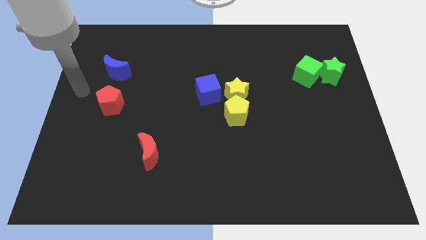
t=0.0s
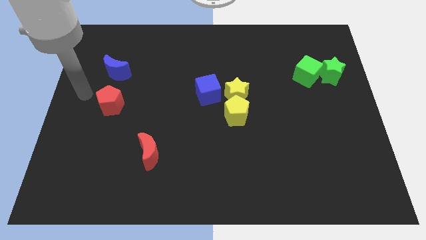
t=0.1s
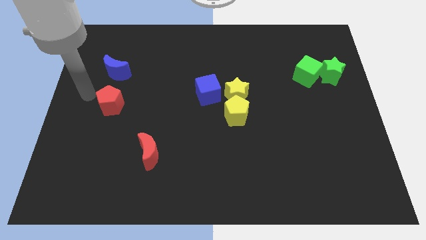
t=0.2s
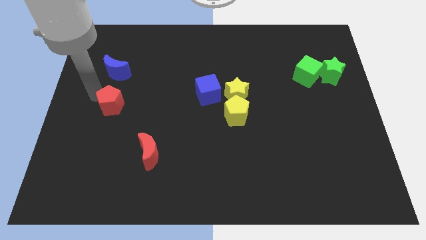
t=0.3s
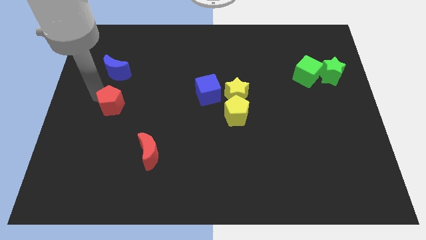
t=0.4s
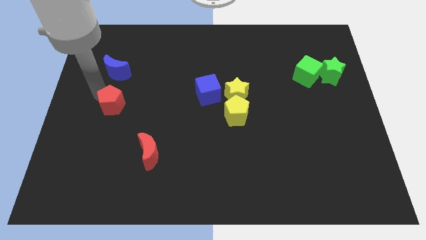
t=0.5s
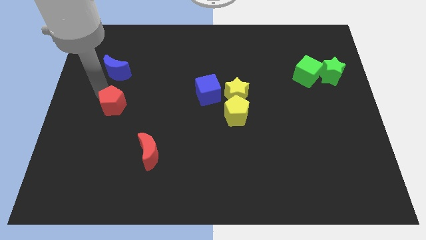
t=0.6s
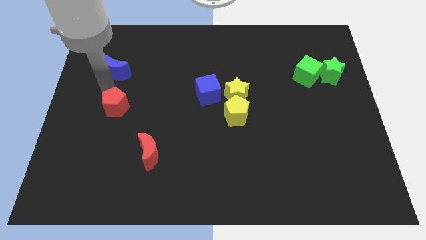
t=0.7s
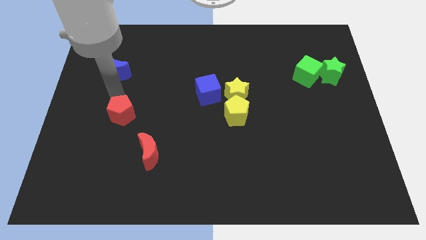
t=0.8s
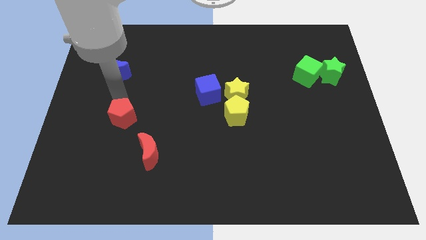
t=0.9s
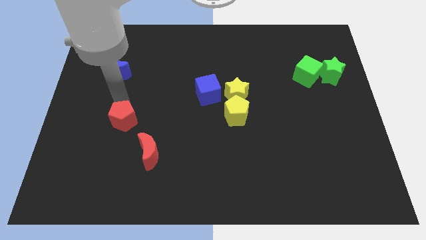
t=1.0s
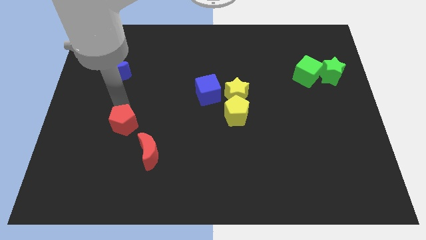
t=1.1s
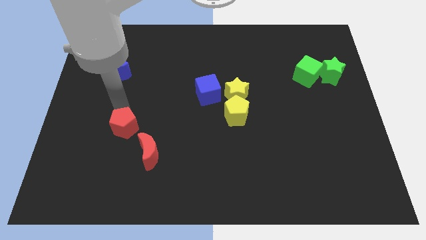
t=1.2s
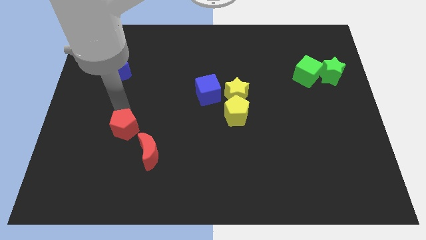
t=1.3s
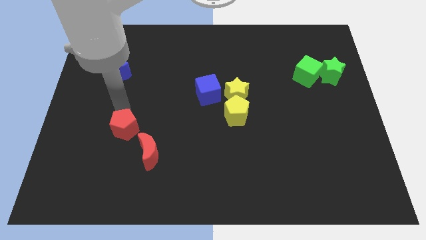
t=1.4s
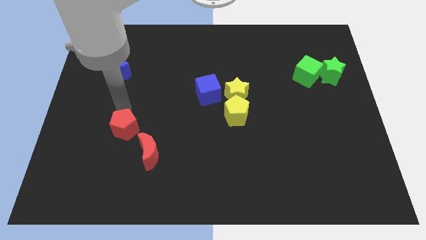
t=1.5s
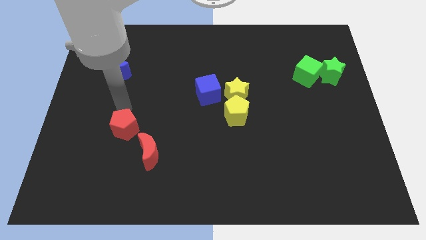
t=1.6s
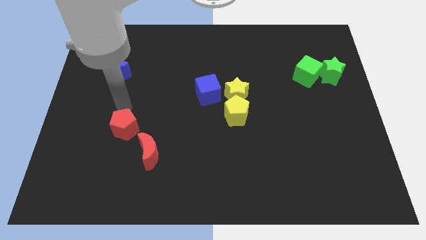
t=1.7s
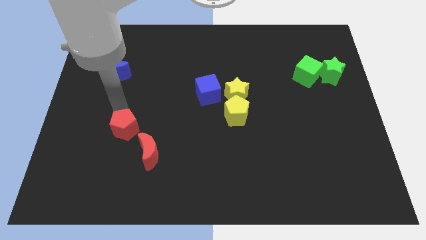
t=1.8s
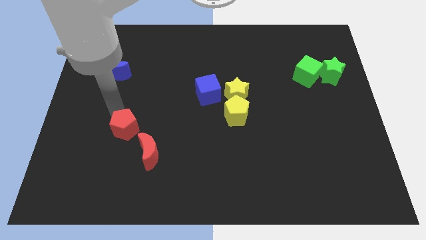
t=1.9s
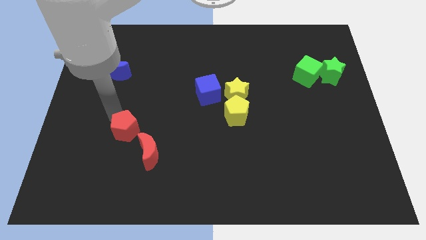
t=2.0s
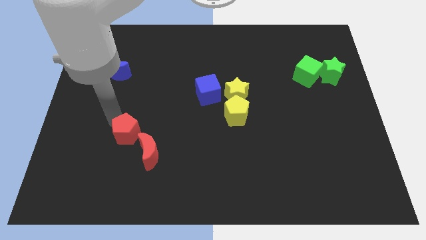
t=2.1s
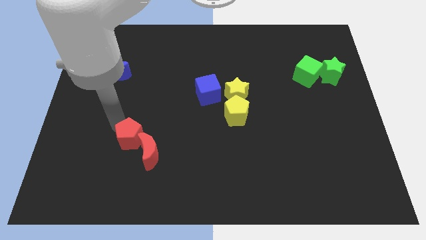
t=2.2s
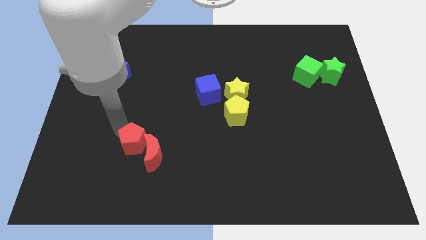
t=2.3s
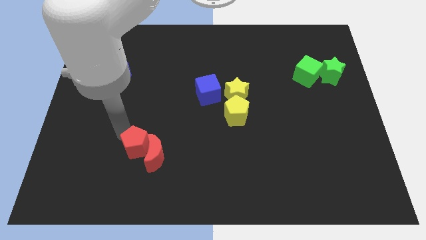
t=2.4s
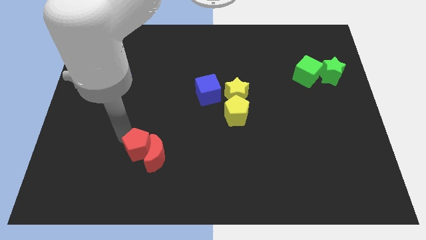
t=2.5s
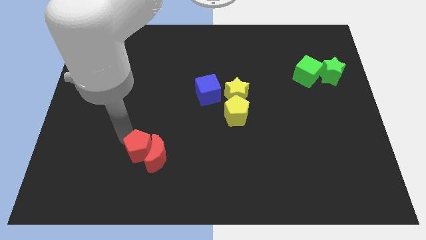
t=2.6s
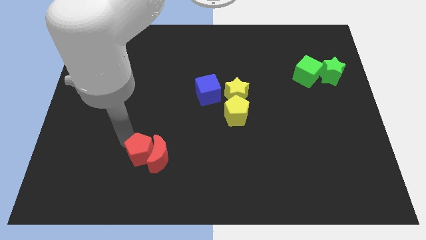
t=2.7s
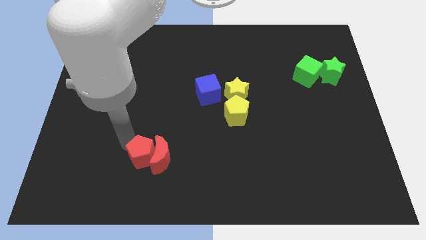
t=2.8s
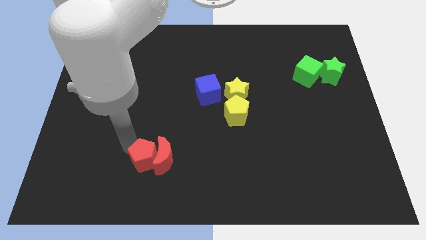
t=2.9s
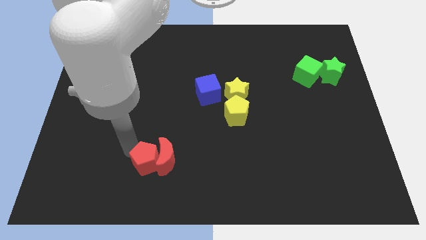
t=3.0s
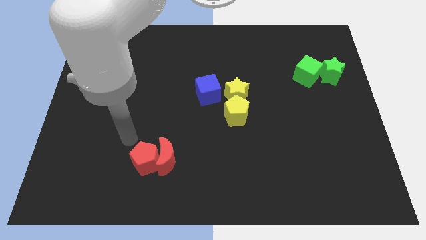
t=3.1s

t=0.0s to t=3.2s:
place the red pentagon left close to the red moon

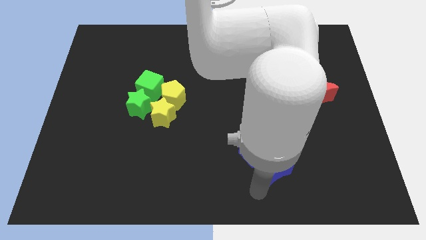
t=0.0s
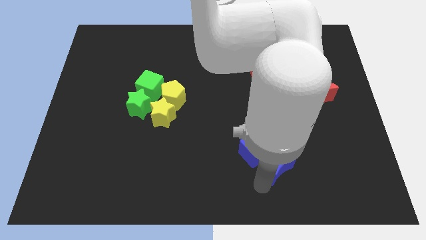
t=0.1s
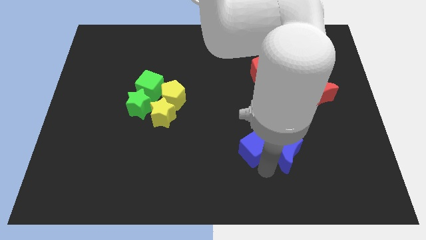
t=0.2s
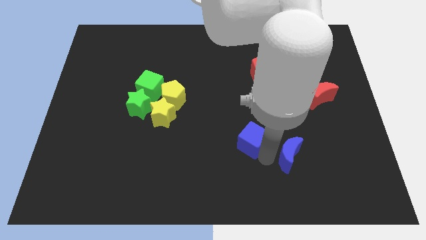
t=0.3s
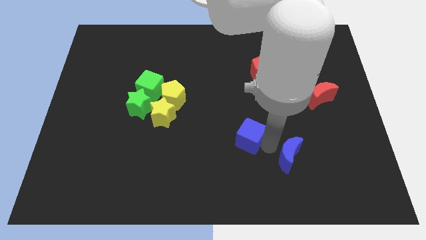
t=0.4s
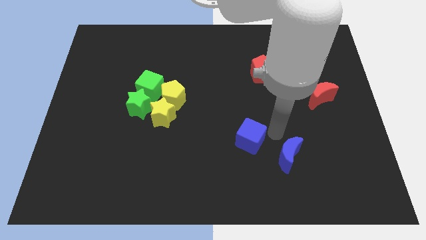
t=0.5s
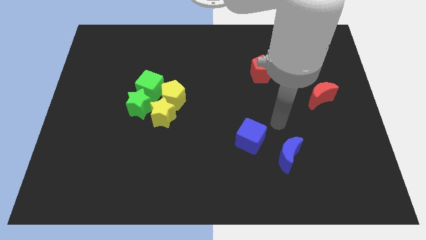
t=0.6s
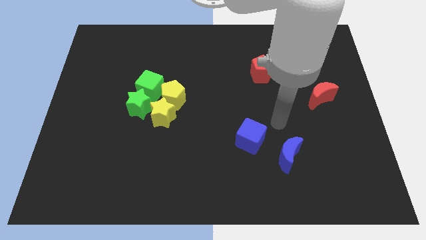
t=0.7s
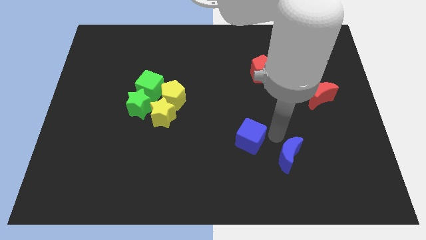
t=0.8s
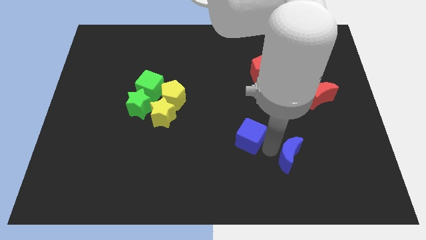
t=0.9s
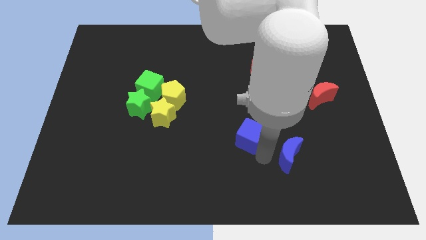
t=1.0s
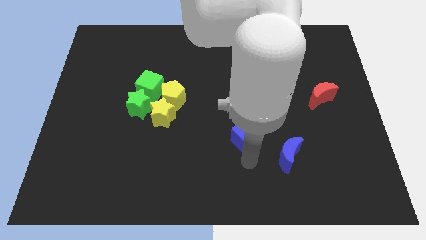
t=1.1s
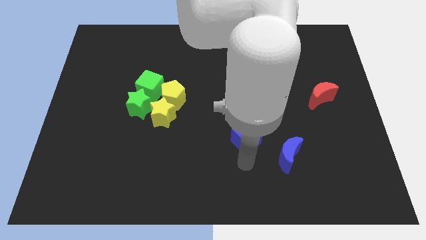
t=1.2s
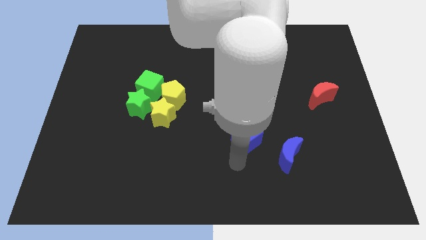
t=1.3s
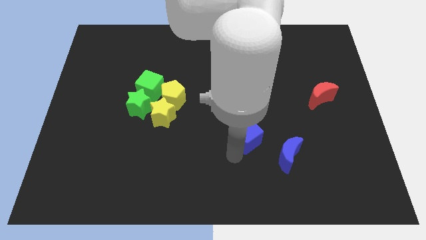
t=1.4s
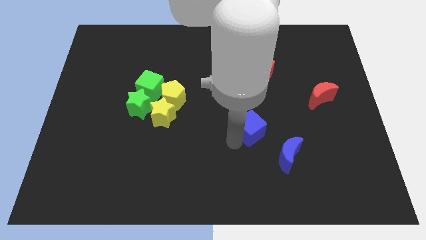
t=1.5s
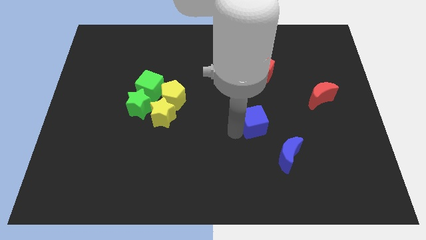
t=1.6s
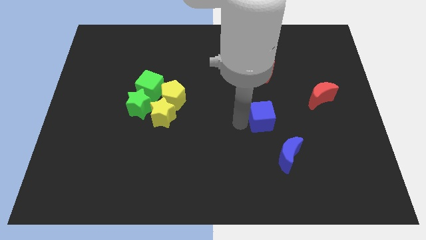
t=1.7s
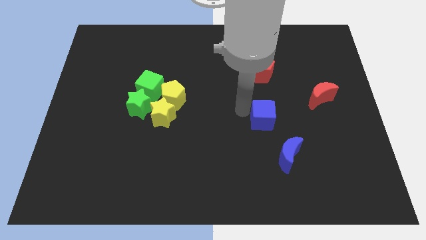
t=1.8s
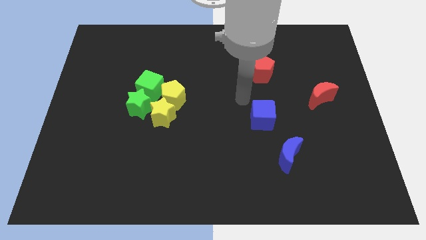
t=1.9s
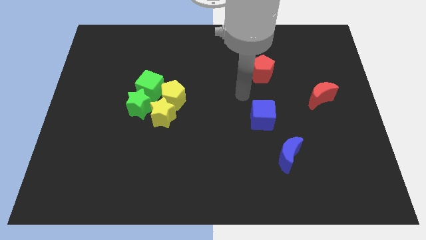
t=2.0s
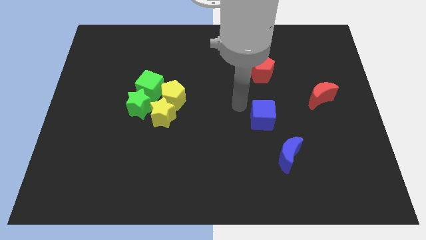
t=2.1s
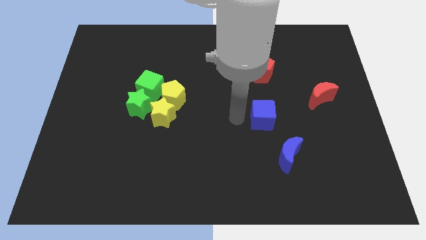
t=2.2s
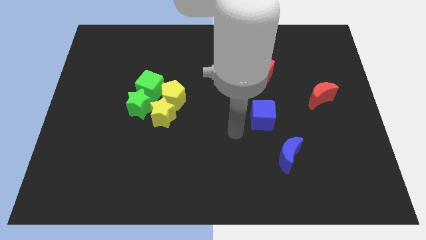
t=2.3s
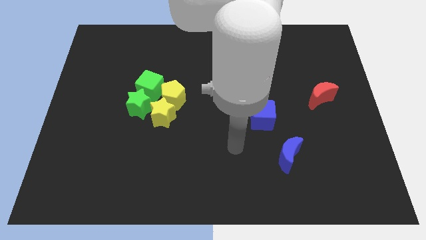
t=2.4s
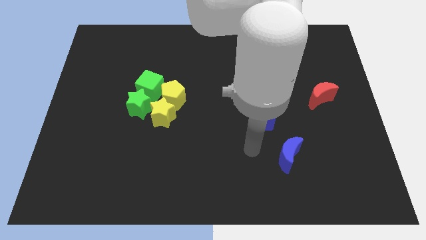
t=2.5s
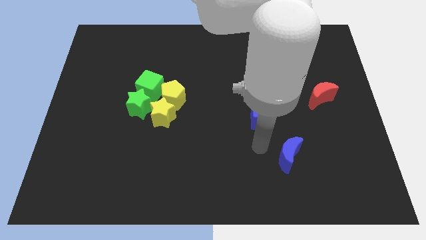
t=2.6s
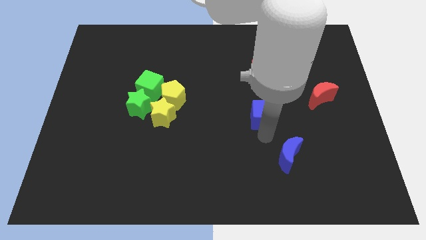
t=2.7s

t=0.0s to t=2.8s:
separate the blue cube from the blue moon

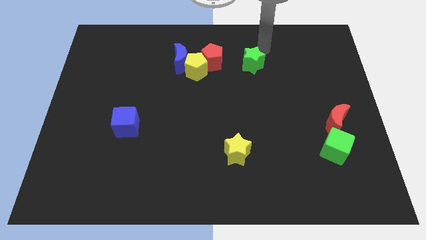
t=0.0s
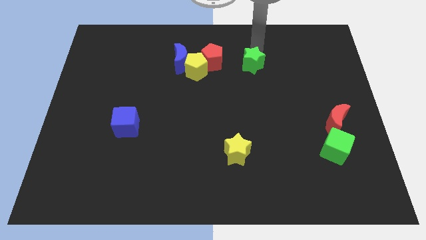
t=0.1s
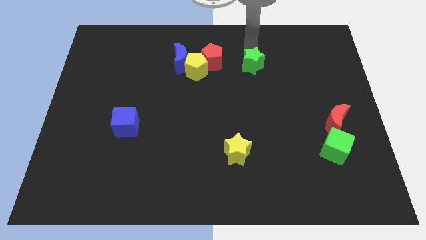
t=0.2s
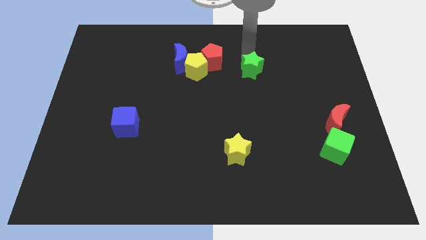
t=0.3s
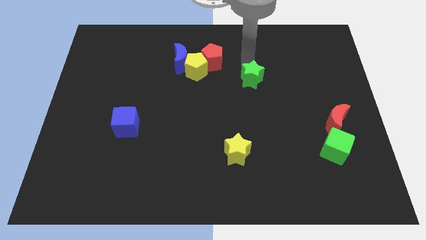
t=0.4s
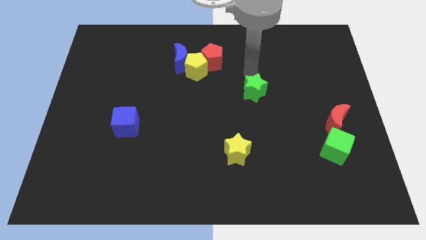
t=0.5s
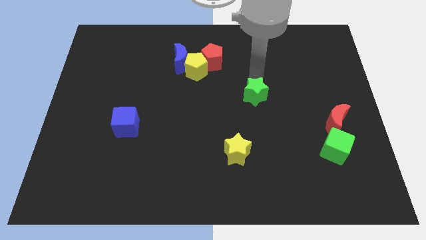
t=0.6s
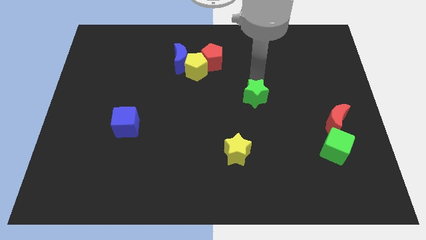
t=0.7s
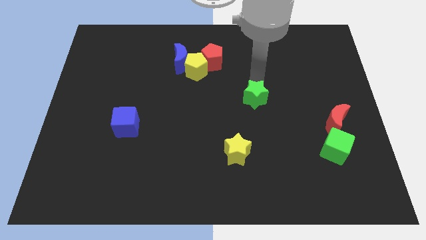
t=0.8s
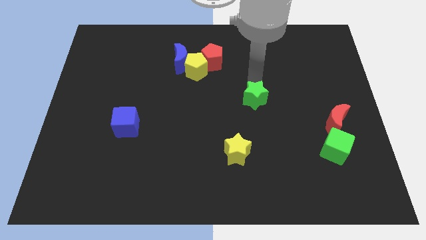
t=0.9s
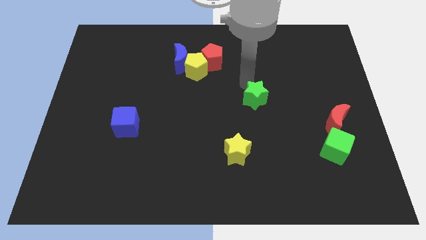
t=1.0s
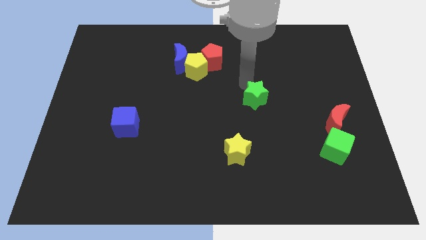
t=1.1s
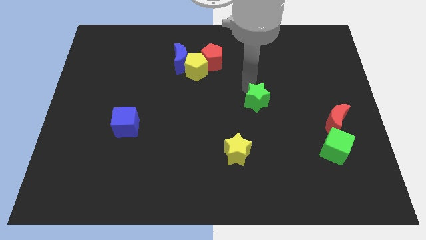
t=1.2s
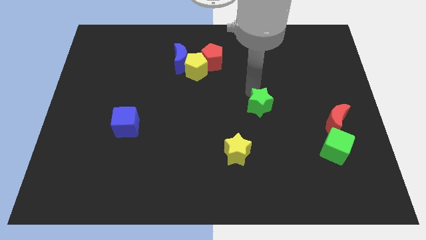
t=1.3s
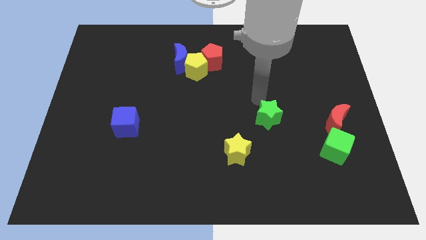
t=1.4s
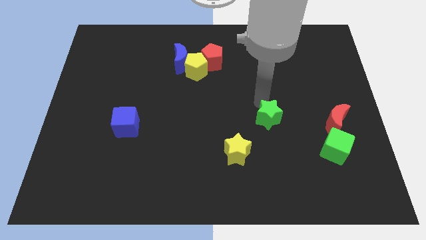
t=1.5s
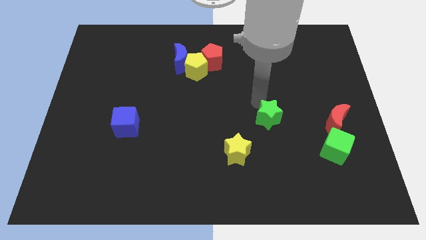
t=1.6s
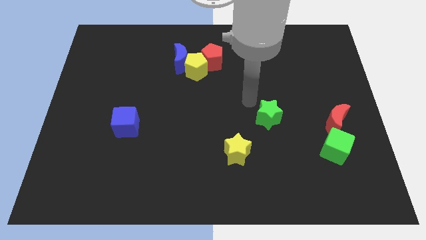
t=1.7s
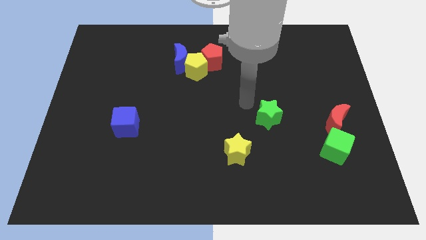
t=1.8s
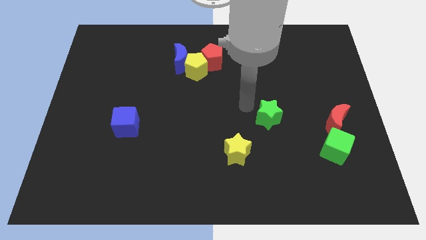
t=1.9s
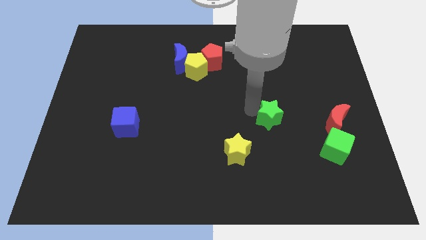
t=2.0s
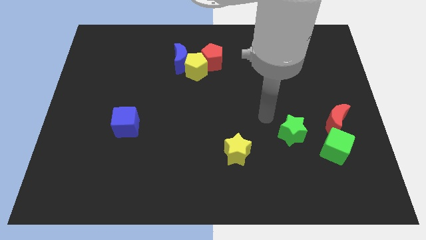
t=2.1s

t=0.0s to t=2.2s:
push the green star to the left of the red crescent

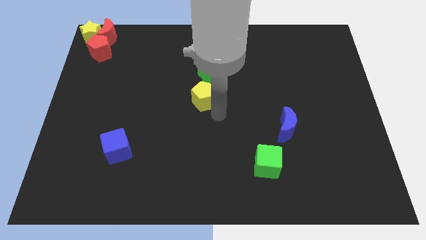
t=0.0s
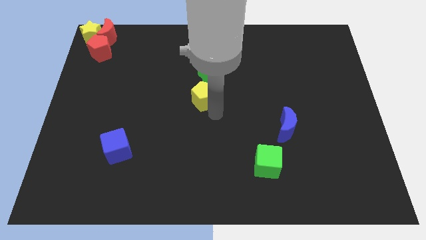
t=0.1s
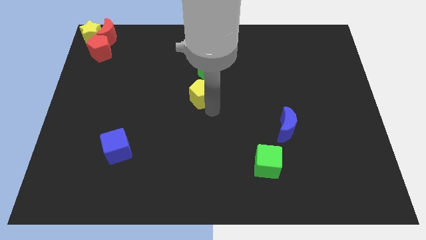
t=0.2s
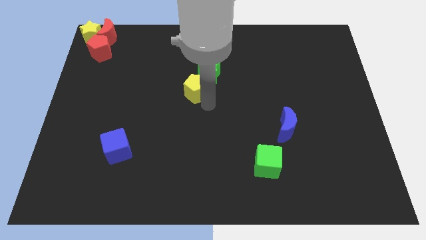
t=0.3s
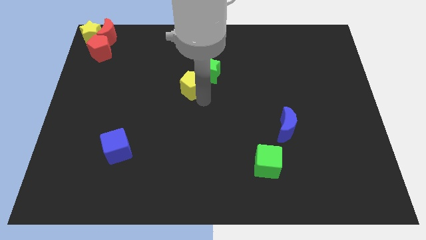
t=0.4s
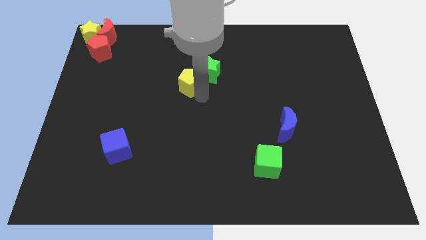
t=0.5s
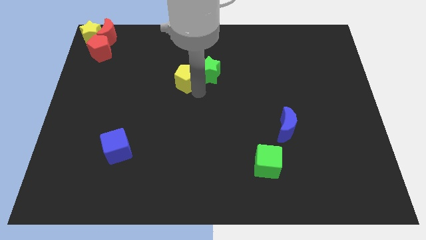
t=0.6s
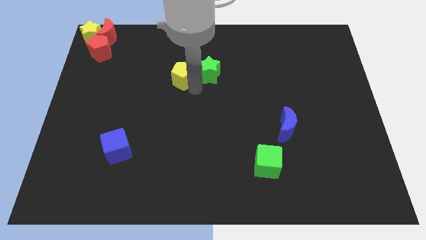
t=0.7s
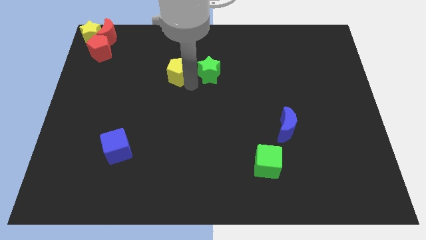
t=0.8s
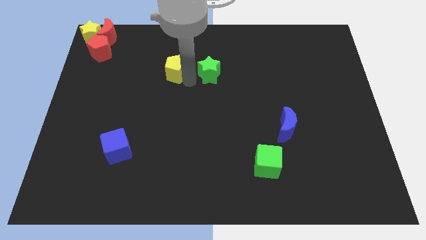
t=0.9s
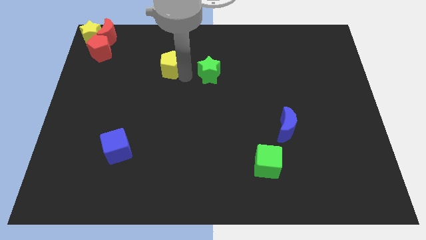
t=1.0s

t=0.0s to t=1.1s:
move yellow pentagon to left of green star
